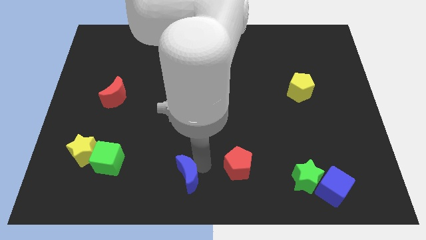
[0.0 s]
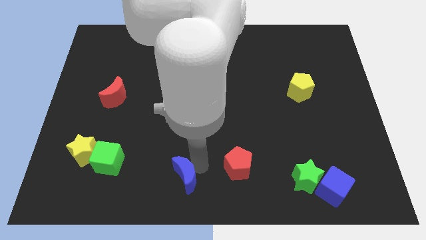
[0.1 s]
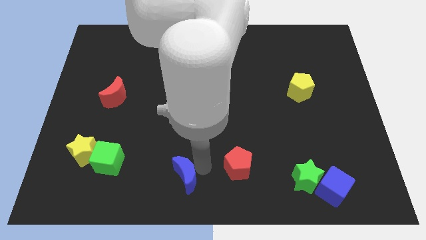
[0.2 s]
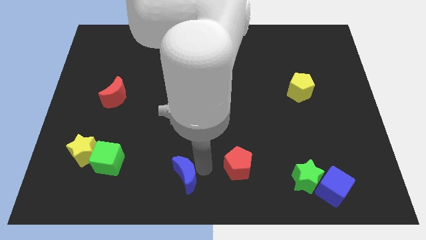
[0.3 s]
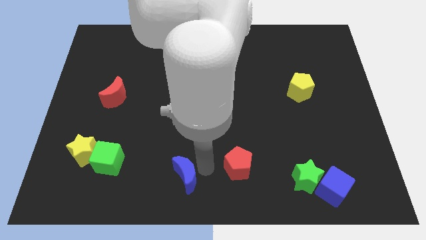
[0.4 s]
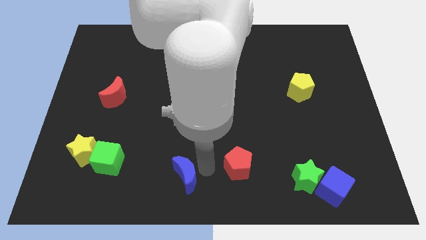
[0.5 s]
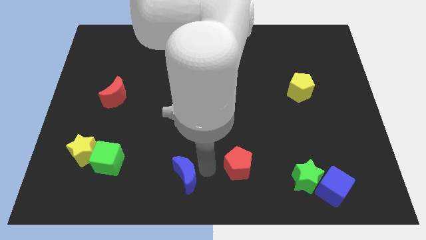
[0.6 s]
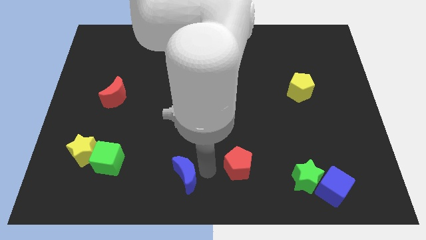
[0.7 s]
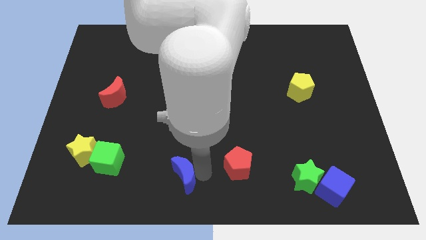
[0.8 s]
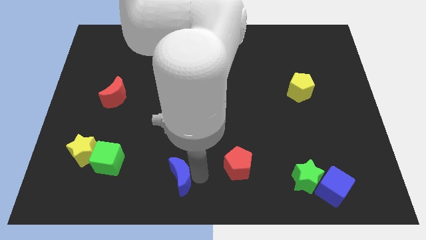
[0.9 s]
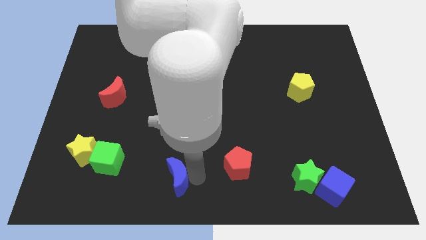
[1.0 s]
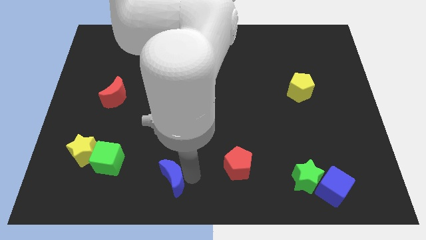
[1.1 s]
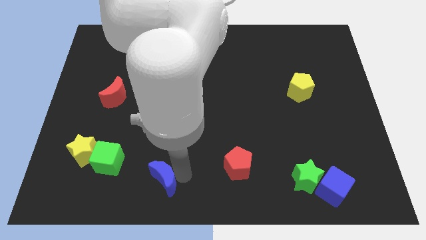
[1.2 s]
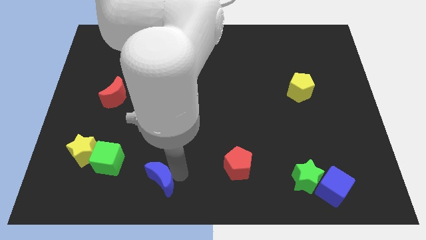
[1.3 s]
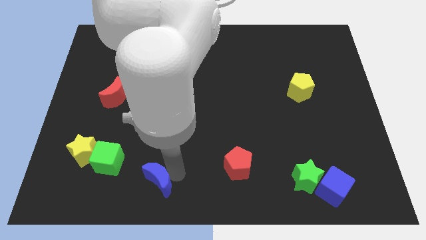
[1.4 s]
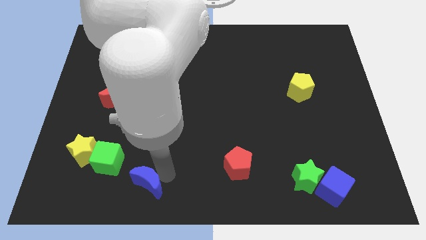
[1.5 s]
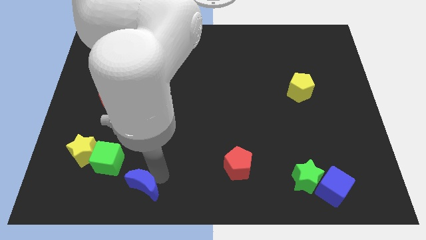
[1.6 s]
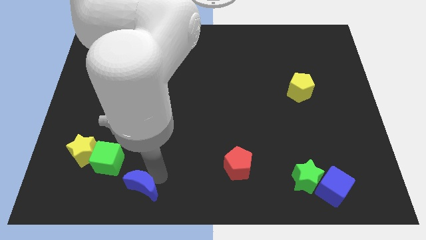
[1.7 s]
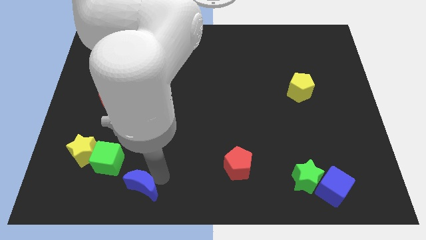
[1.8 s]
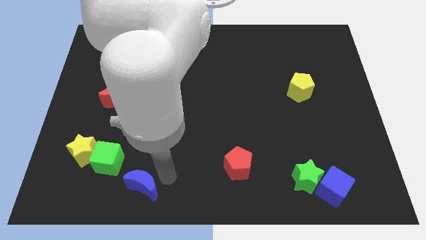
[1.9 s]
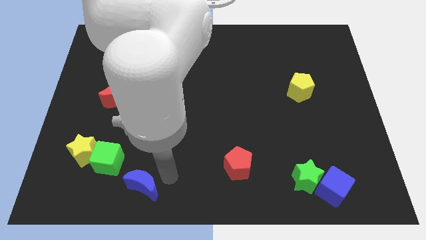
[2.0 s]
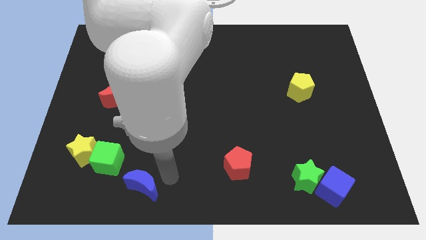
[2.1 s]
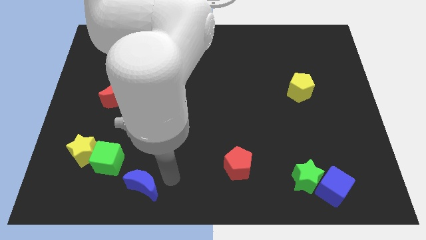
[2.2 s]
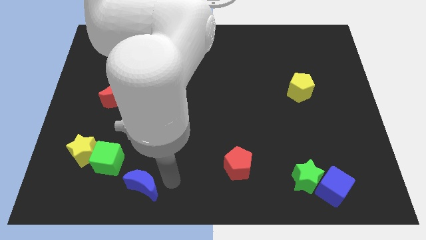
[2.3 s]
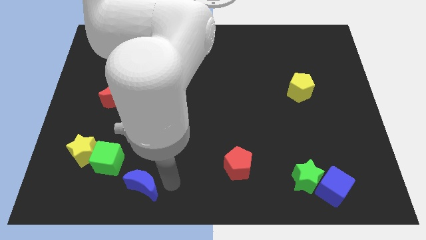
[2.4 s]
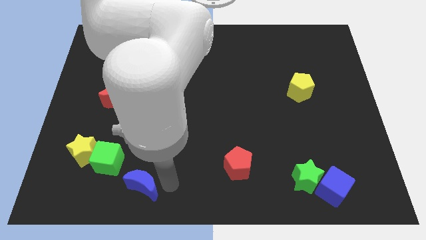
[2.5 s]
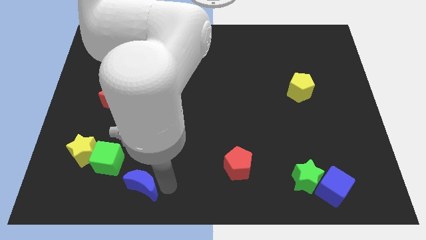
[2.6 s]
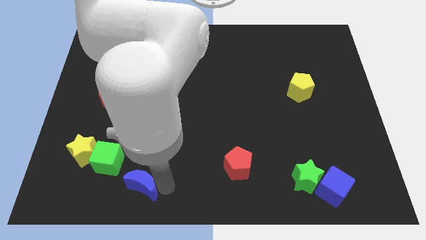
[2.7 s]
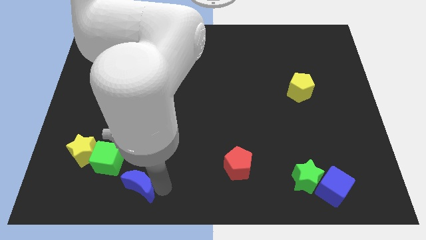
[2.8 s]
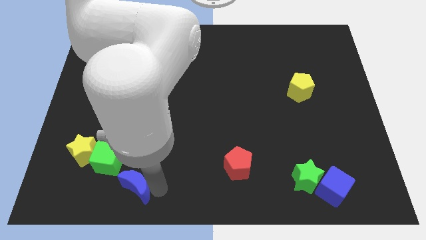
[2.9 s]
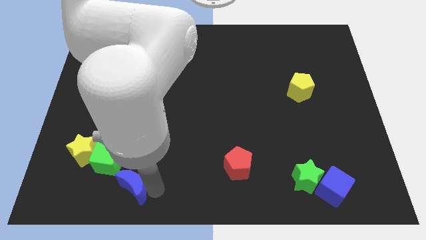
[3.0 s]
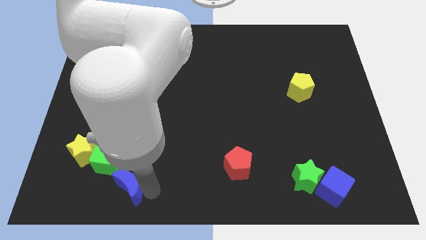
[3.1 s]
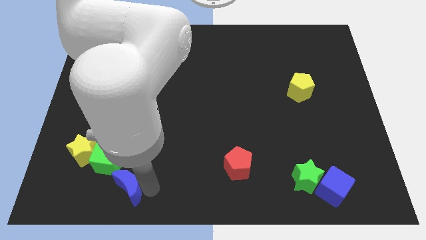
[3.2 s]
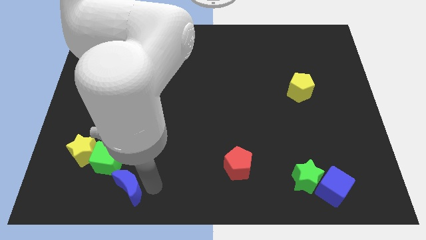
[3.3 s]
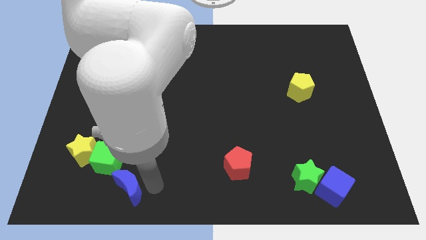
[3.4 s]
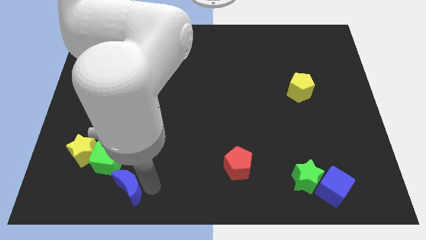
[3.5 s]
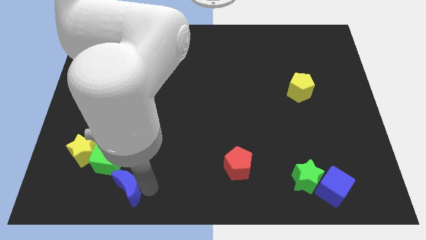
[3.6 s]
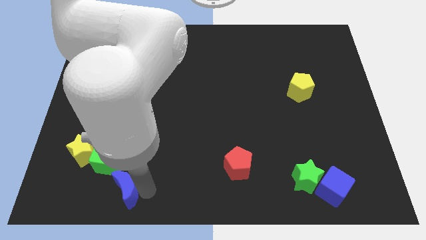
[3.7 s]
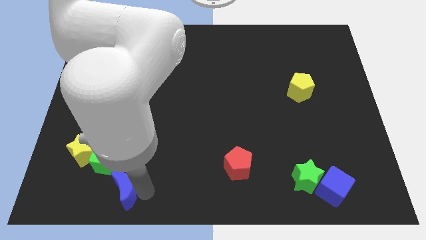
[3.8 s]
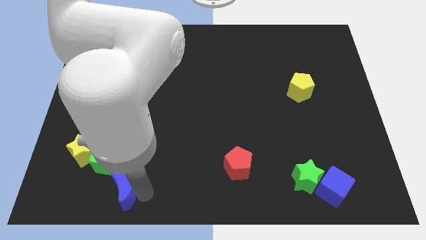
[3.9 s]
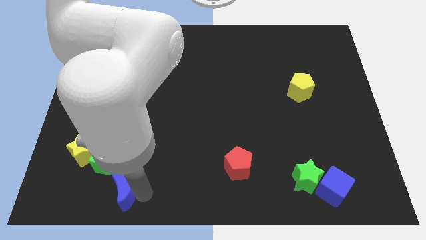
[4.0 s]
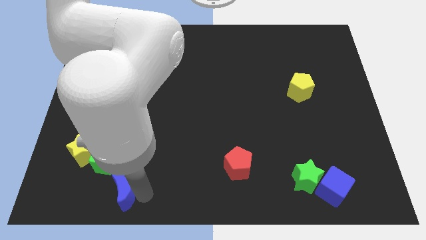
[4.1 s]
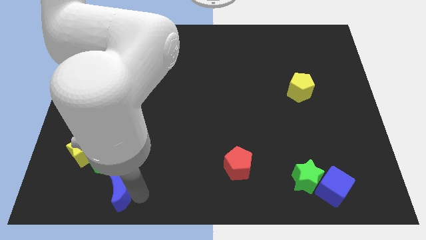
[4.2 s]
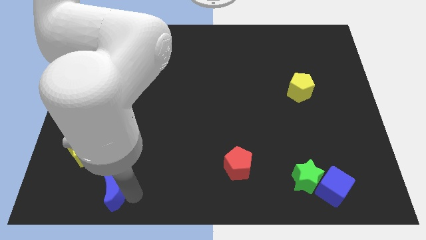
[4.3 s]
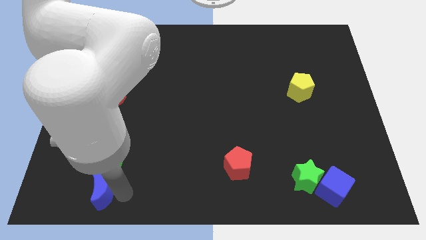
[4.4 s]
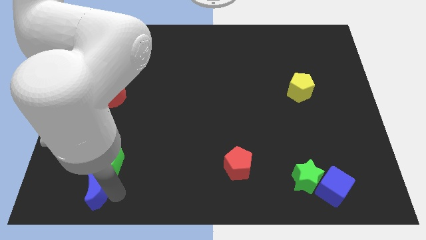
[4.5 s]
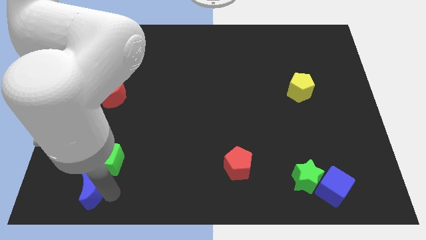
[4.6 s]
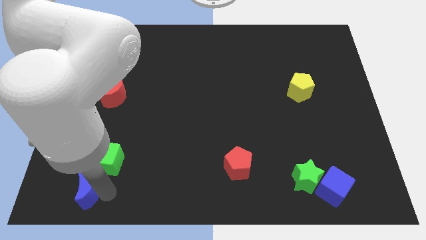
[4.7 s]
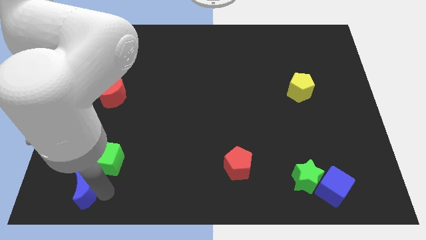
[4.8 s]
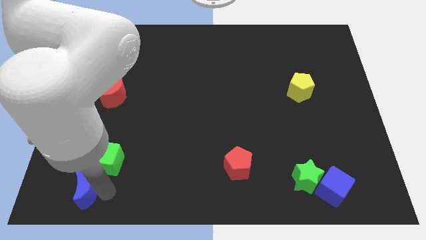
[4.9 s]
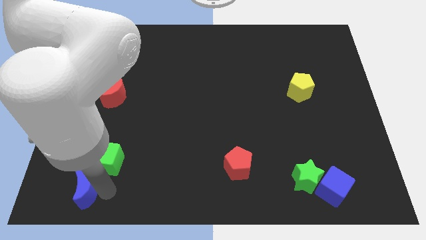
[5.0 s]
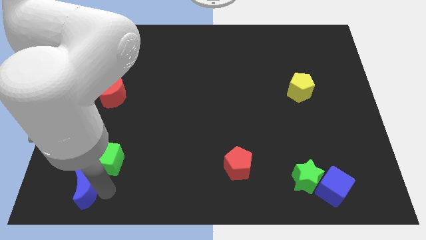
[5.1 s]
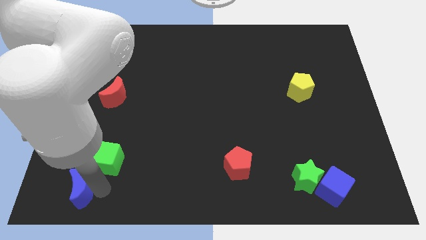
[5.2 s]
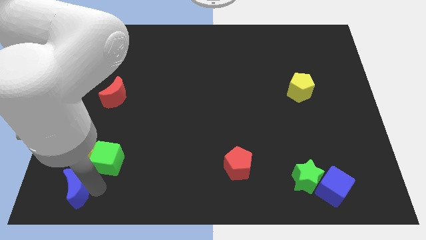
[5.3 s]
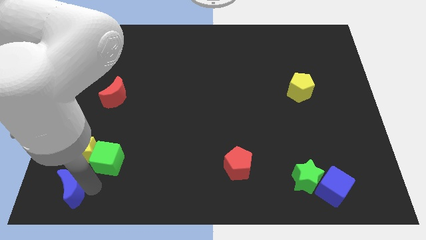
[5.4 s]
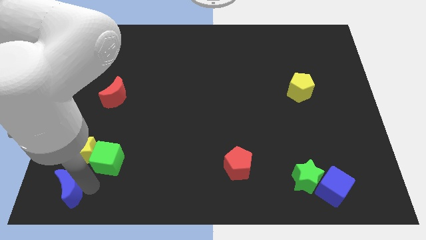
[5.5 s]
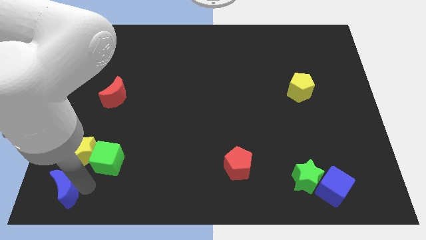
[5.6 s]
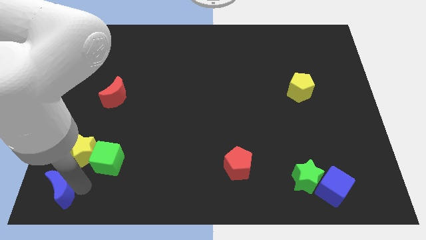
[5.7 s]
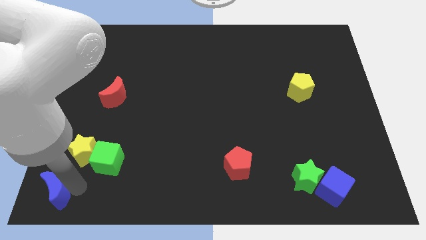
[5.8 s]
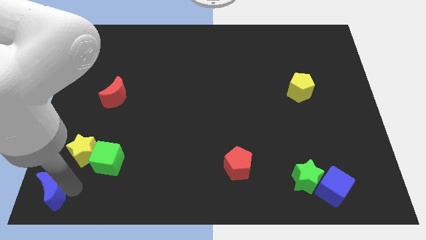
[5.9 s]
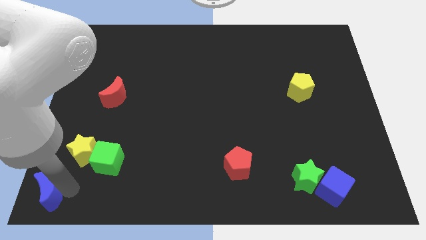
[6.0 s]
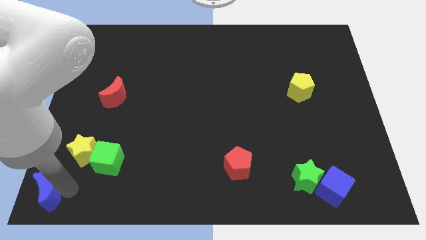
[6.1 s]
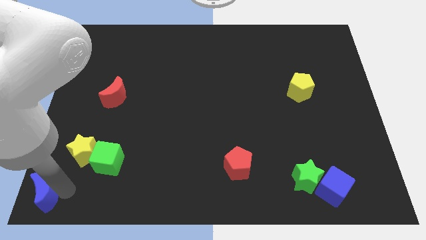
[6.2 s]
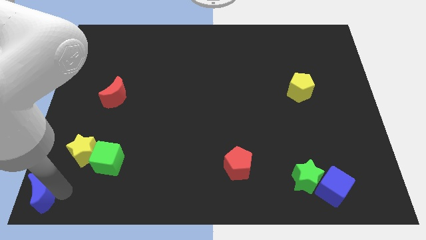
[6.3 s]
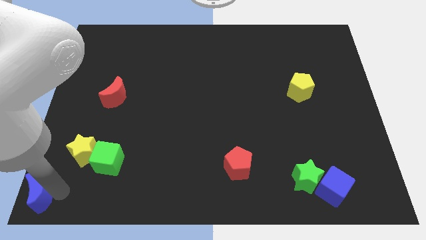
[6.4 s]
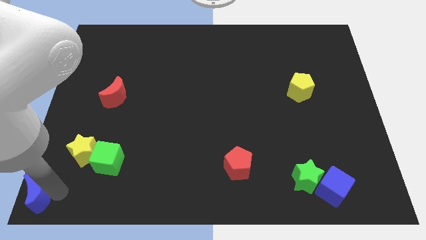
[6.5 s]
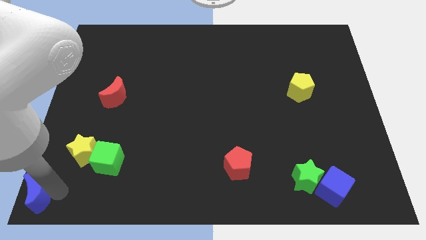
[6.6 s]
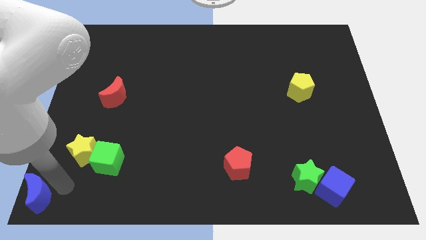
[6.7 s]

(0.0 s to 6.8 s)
push the blue crescent to the bottom left corner of the board

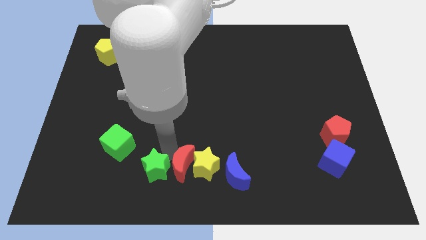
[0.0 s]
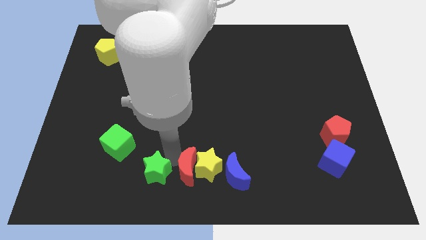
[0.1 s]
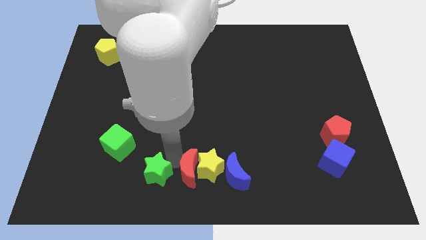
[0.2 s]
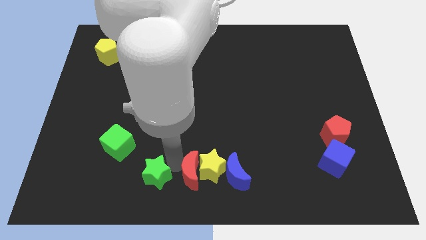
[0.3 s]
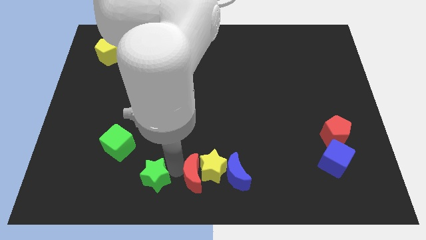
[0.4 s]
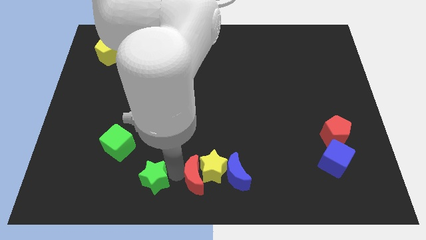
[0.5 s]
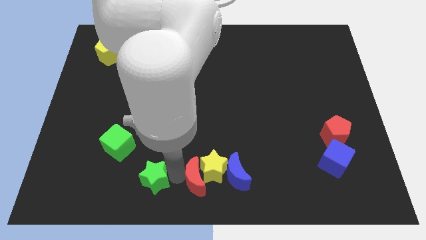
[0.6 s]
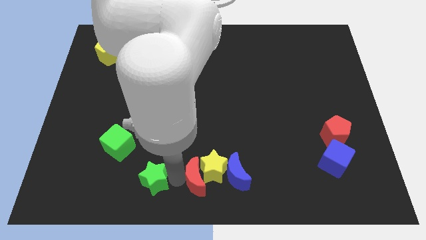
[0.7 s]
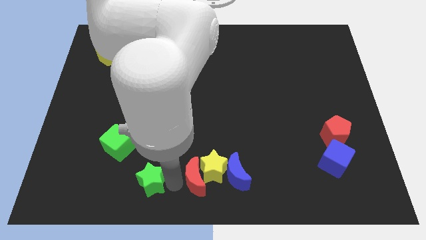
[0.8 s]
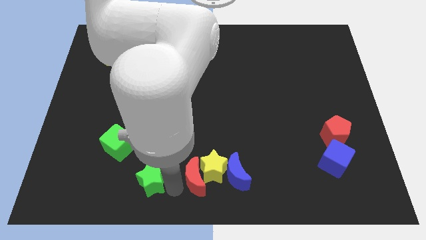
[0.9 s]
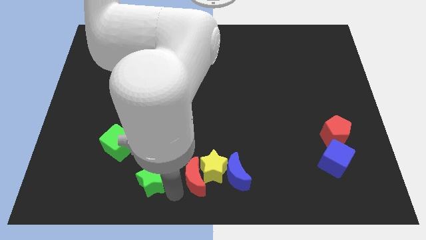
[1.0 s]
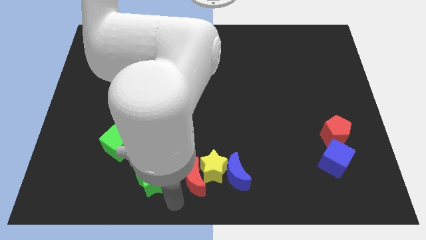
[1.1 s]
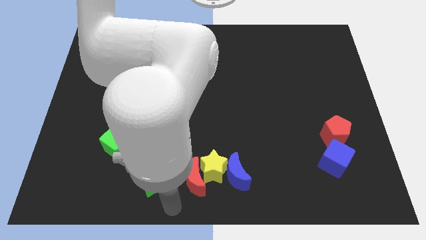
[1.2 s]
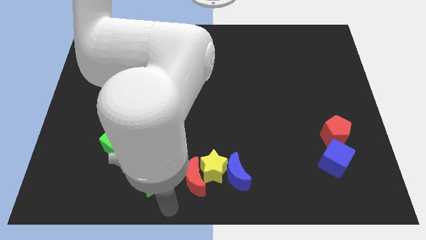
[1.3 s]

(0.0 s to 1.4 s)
separate the green star and red crescent

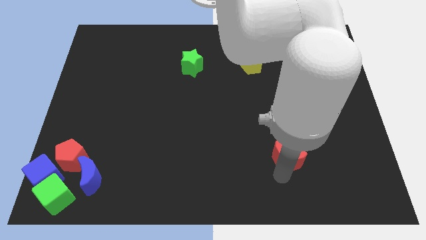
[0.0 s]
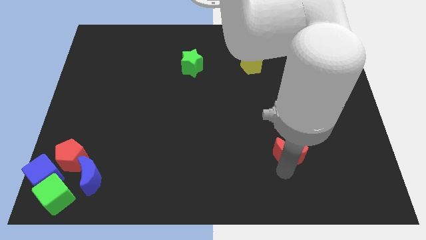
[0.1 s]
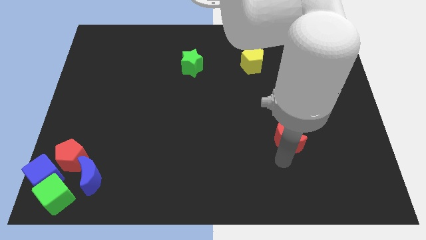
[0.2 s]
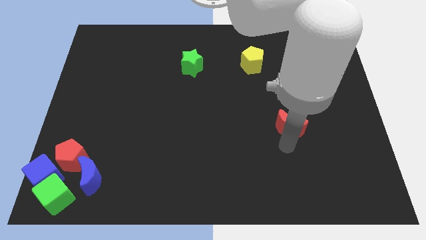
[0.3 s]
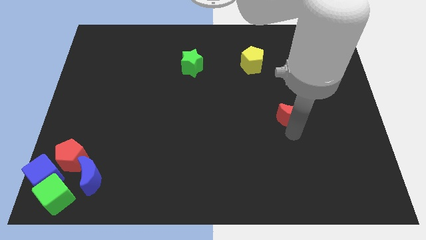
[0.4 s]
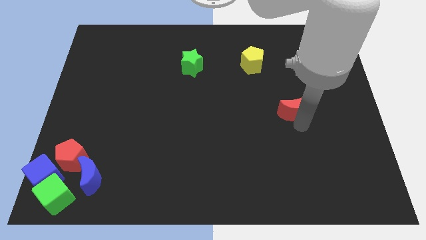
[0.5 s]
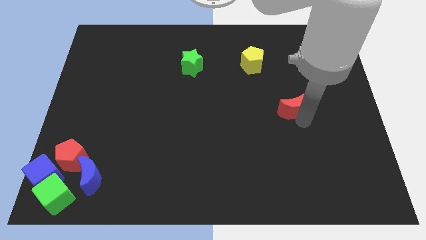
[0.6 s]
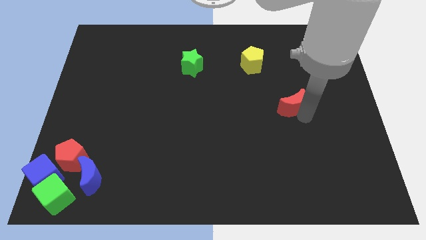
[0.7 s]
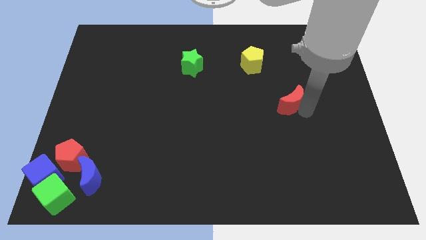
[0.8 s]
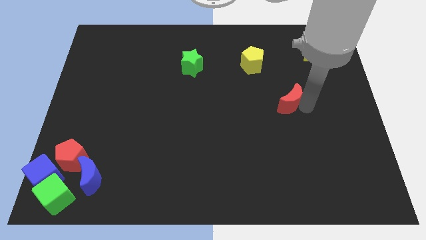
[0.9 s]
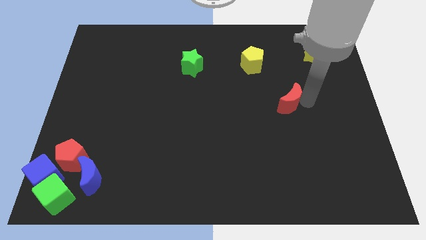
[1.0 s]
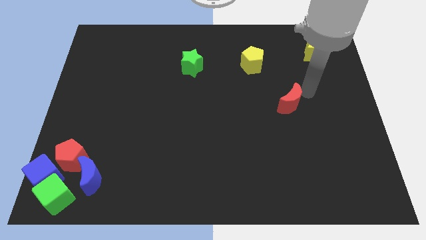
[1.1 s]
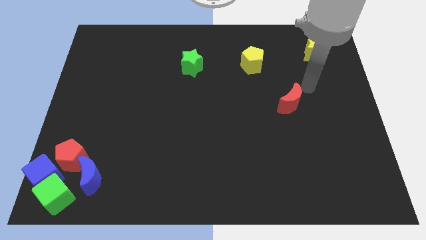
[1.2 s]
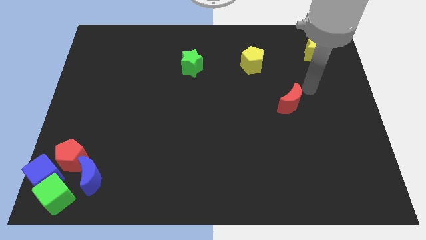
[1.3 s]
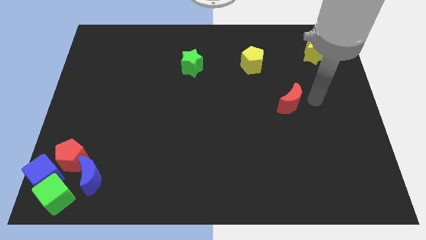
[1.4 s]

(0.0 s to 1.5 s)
move the red crescent to the bottom right of the yellow pentagon
